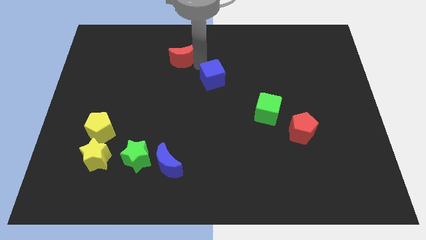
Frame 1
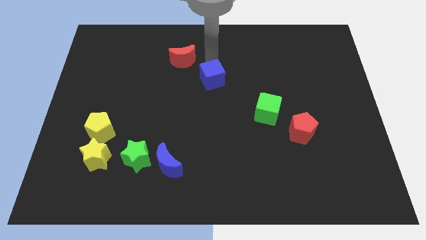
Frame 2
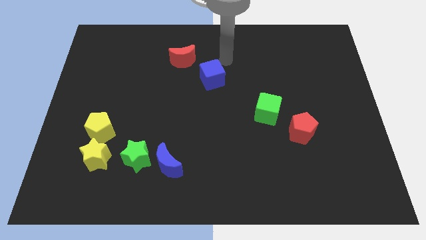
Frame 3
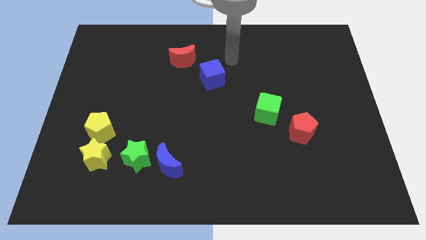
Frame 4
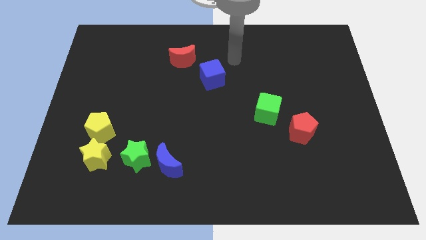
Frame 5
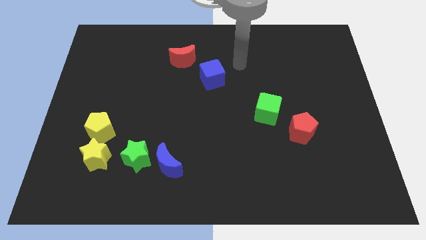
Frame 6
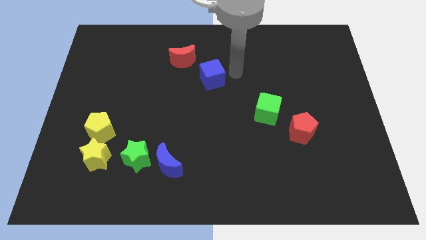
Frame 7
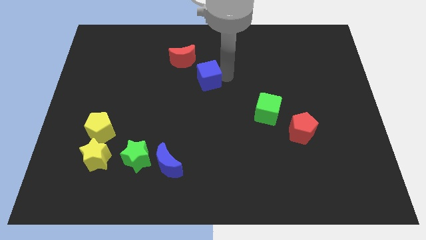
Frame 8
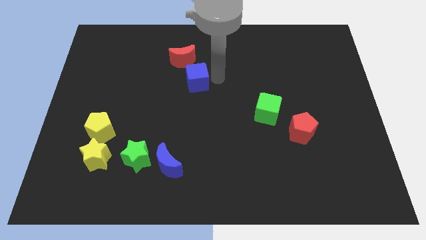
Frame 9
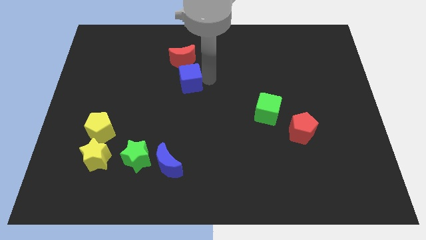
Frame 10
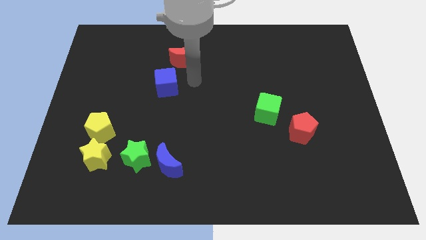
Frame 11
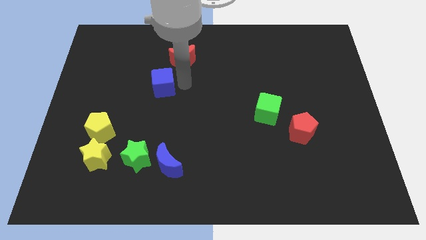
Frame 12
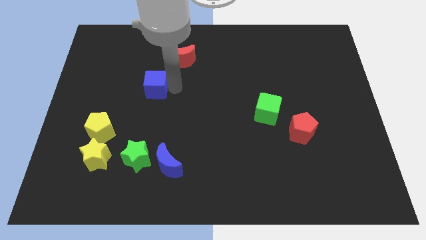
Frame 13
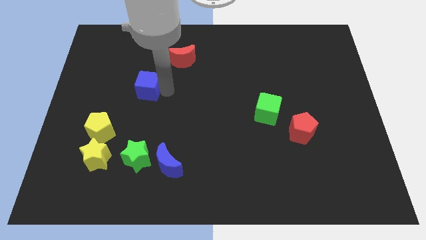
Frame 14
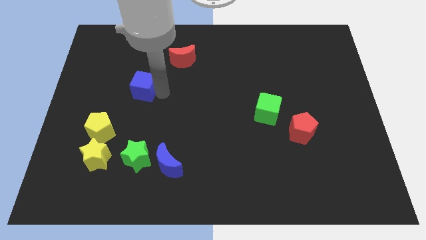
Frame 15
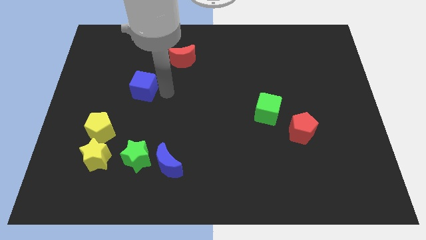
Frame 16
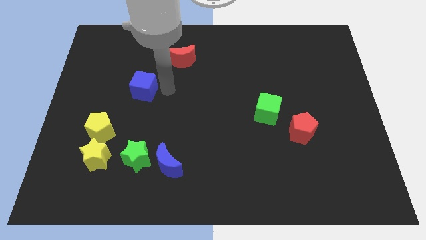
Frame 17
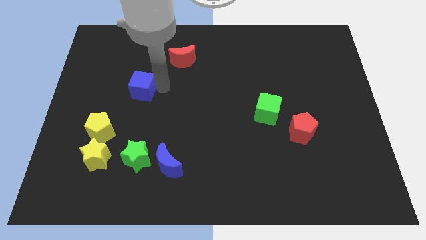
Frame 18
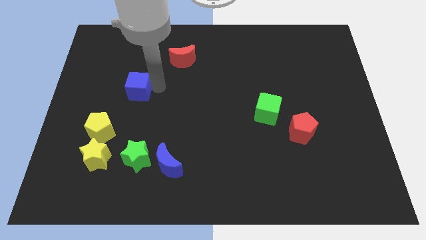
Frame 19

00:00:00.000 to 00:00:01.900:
separate the blue cube from red crescent

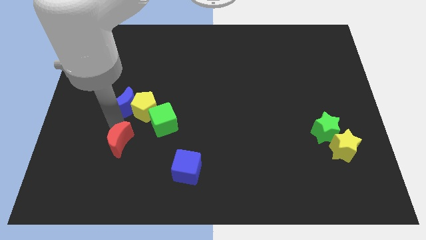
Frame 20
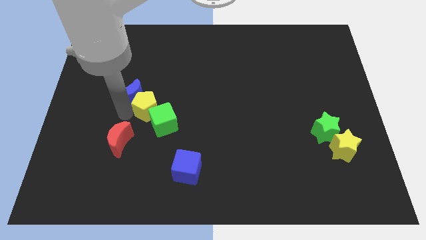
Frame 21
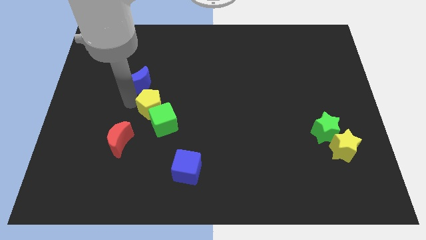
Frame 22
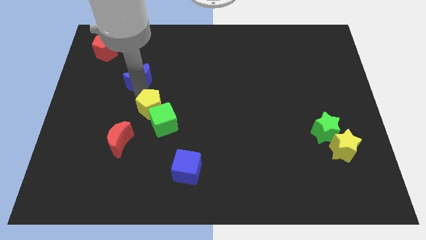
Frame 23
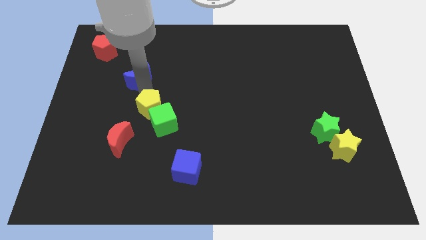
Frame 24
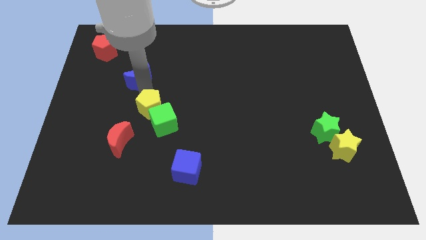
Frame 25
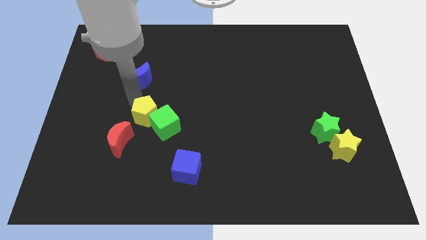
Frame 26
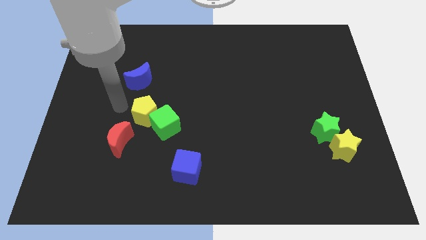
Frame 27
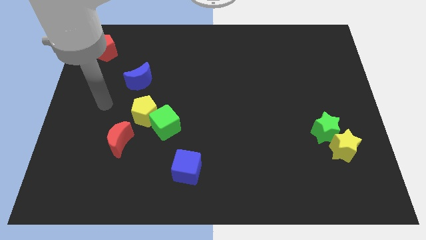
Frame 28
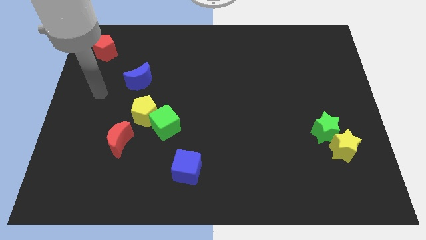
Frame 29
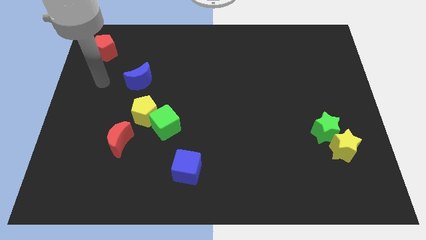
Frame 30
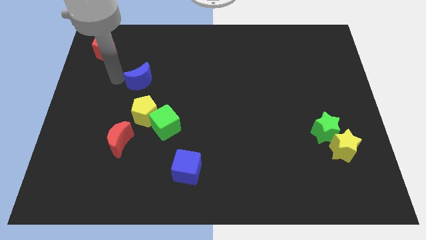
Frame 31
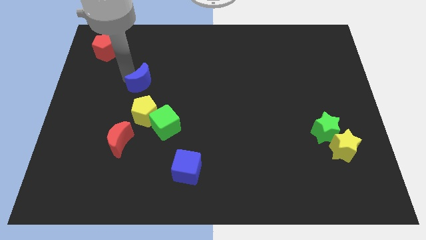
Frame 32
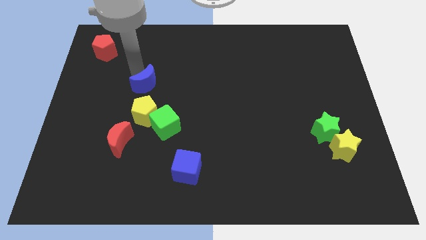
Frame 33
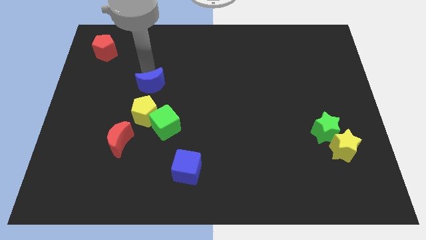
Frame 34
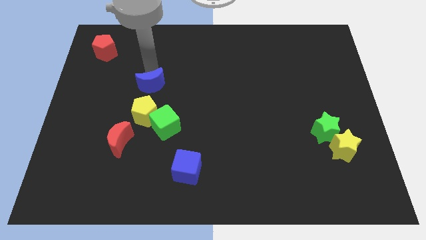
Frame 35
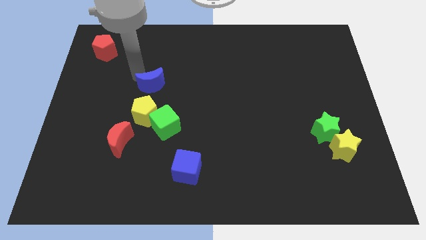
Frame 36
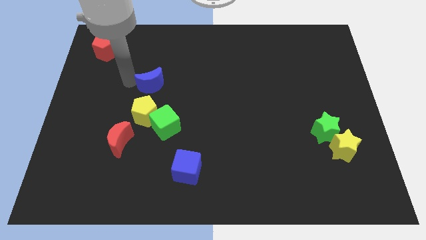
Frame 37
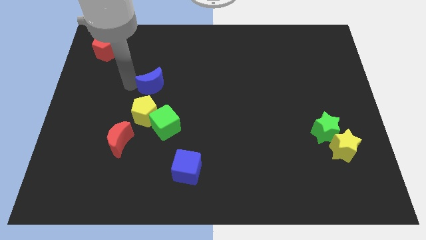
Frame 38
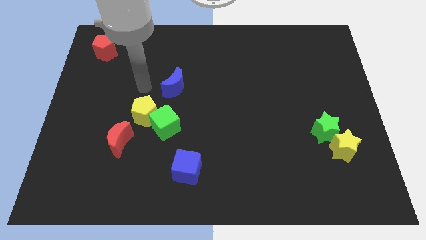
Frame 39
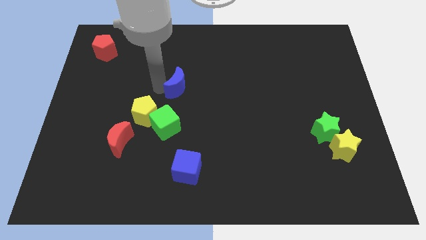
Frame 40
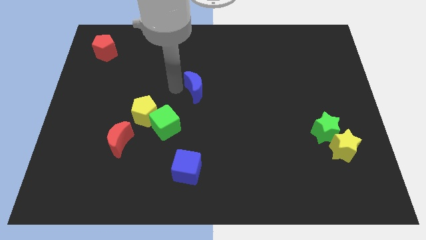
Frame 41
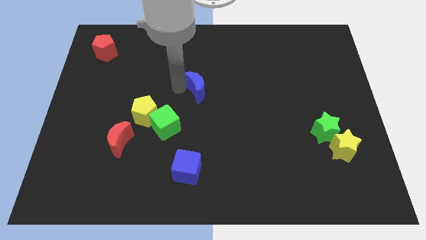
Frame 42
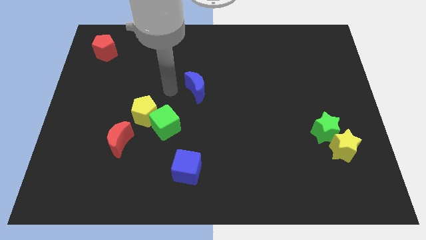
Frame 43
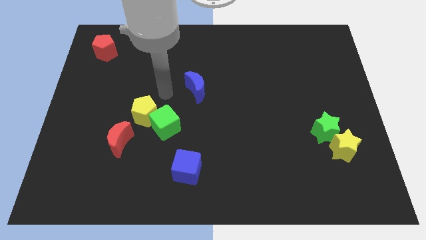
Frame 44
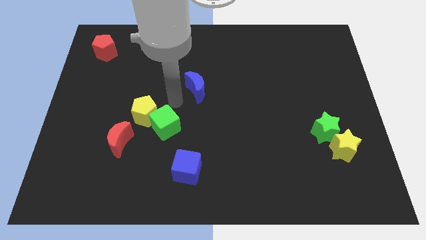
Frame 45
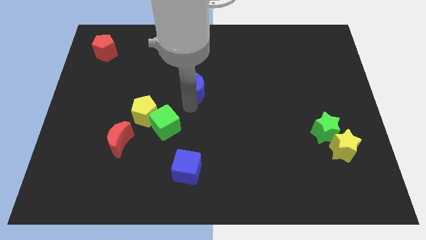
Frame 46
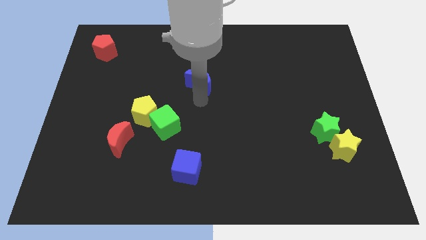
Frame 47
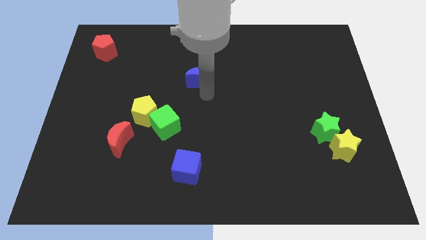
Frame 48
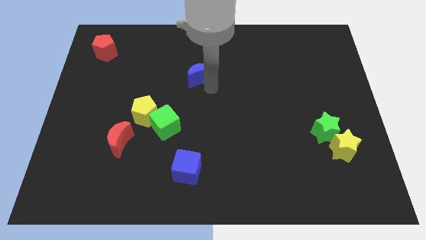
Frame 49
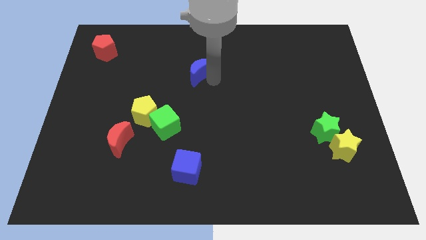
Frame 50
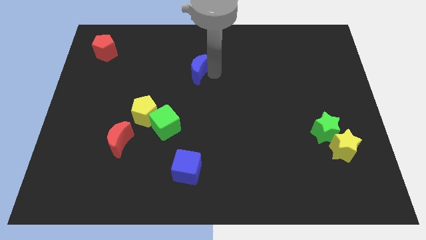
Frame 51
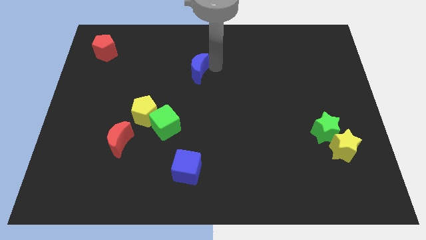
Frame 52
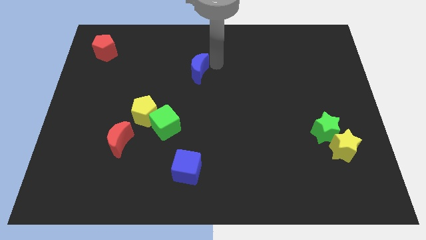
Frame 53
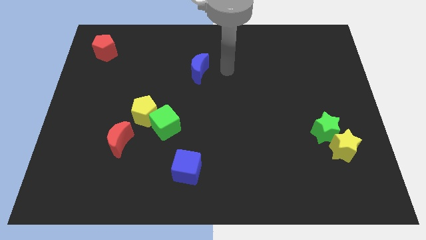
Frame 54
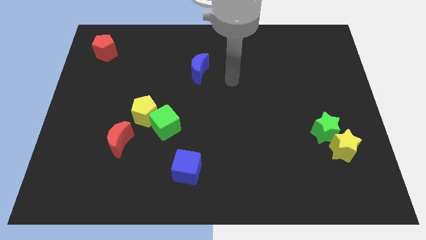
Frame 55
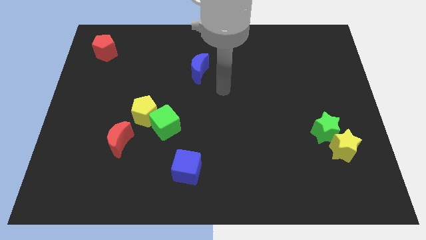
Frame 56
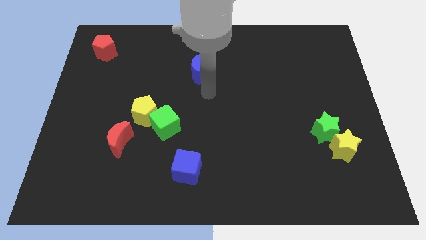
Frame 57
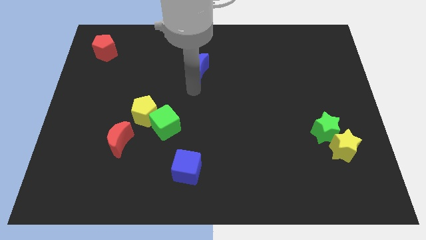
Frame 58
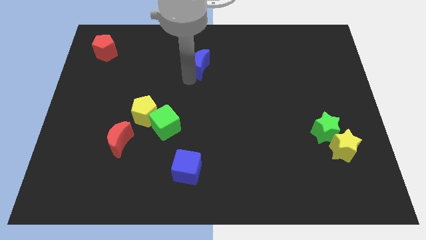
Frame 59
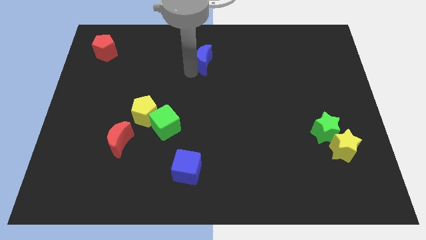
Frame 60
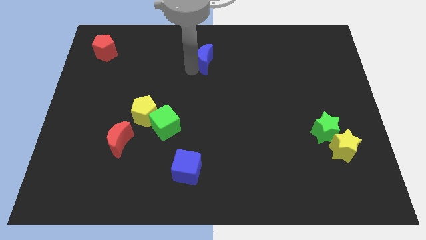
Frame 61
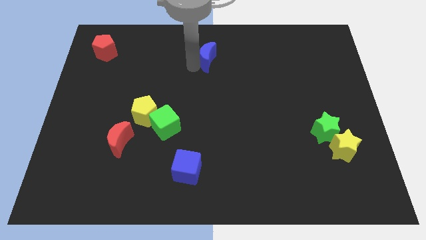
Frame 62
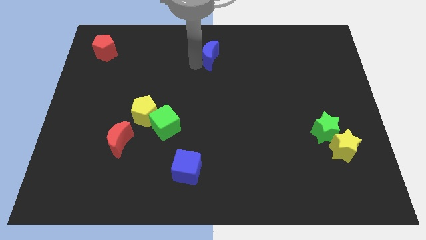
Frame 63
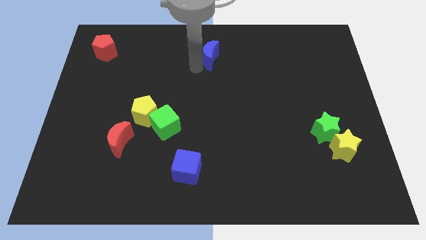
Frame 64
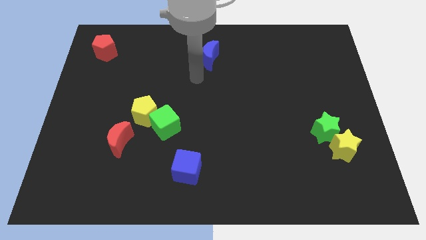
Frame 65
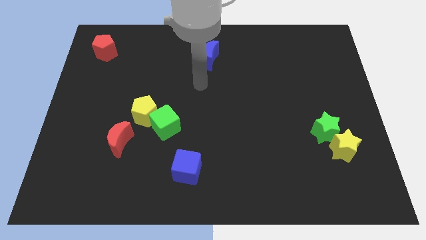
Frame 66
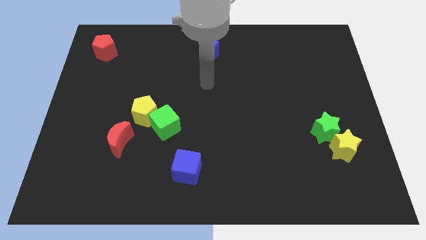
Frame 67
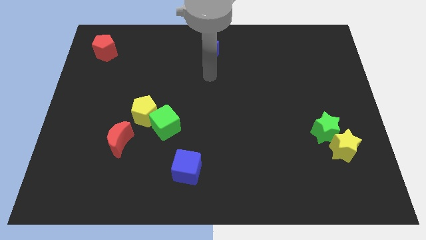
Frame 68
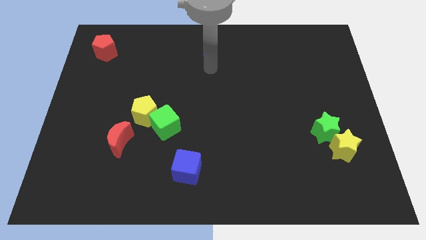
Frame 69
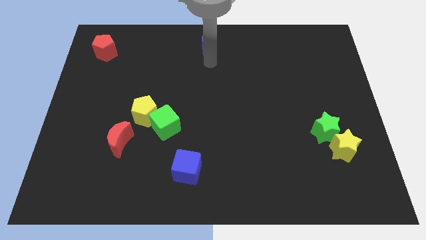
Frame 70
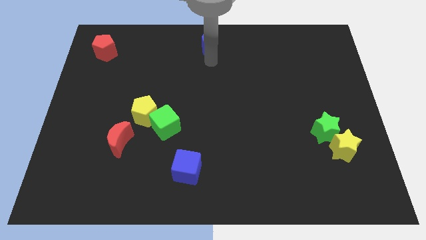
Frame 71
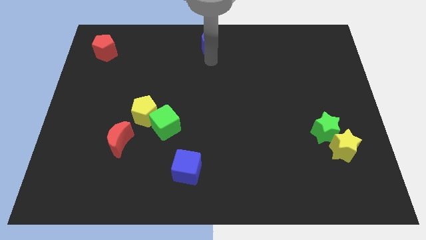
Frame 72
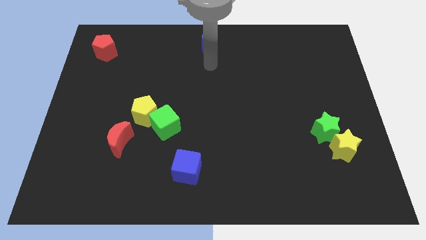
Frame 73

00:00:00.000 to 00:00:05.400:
place the blue moon to the top center

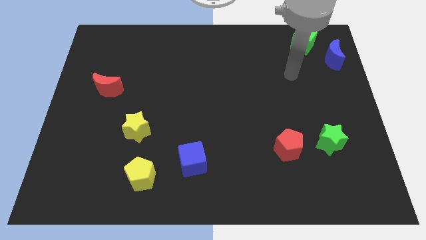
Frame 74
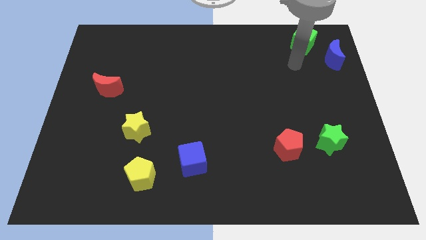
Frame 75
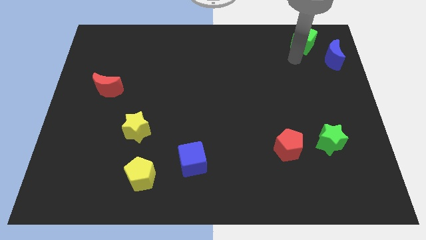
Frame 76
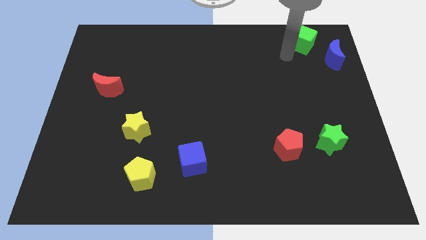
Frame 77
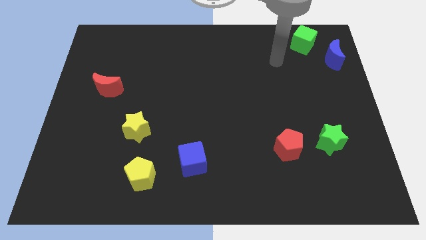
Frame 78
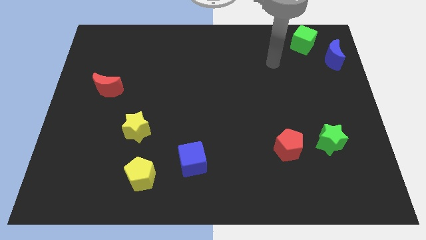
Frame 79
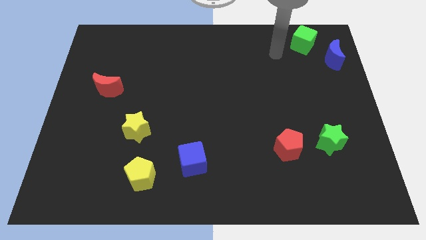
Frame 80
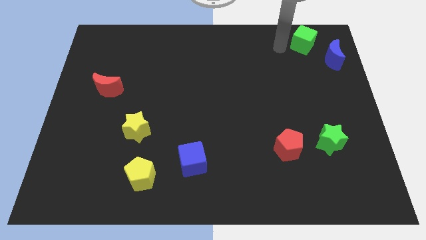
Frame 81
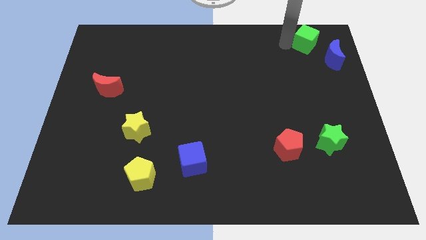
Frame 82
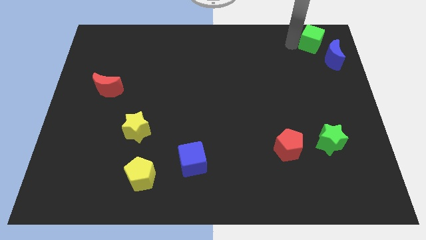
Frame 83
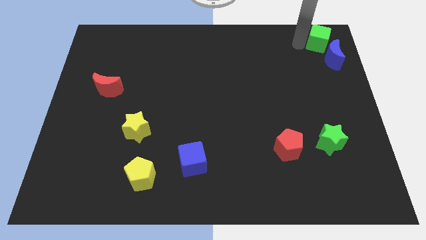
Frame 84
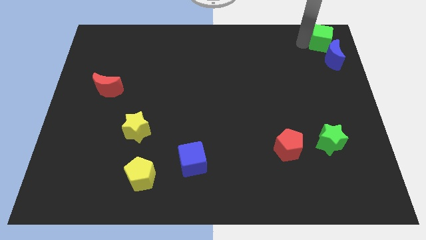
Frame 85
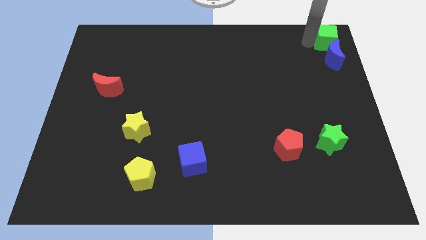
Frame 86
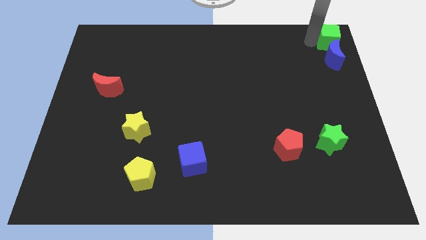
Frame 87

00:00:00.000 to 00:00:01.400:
place the green cube above the blue moon

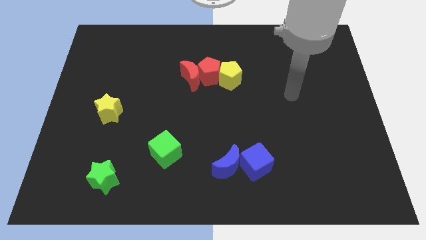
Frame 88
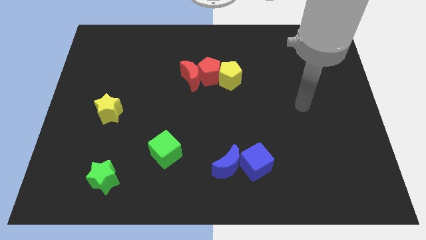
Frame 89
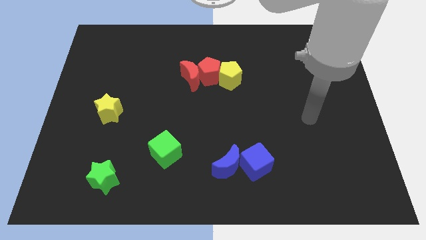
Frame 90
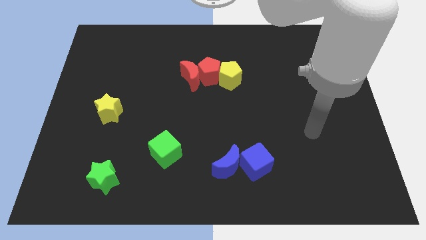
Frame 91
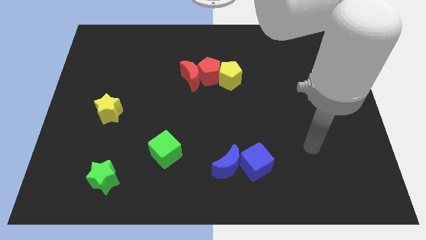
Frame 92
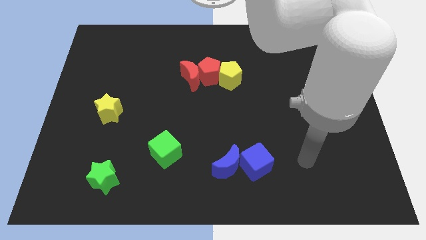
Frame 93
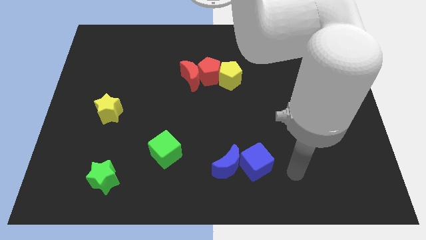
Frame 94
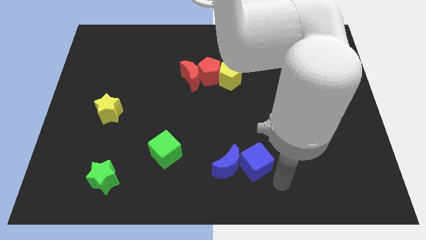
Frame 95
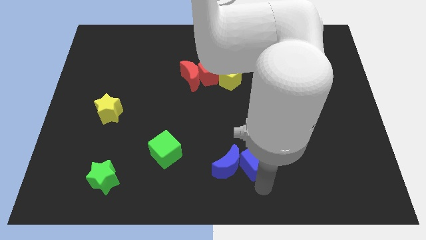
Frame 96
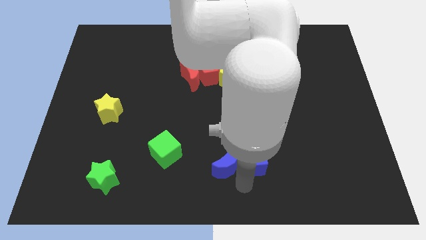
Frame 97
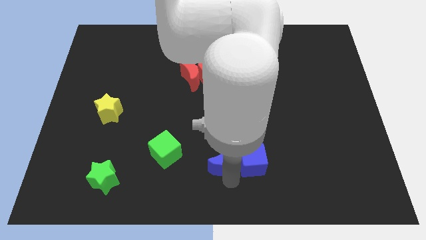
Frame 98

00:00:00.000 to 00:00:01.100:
touch the bottom of blue crescent
